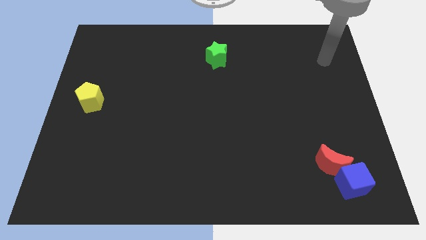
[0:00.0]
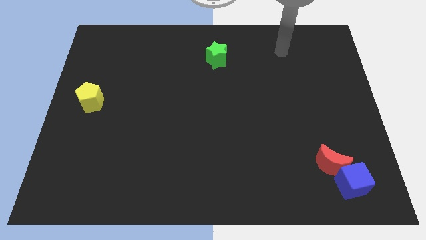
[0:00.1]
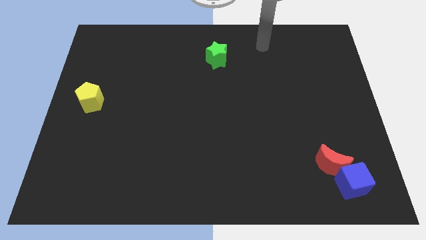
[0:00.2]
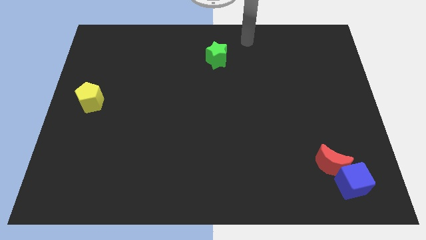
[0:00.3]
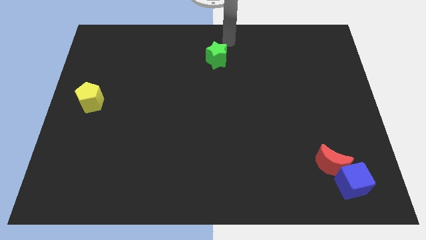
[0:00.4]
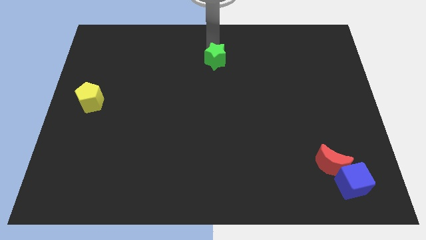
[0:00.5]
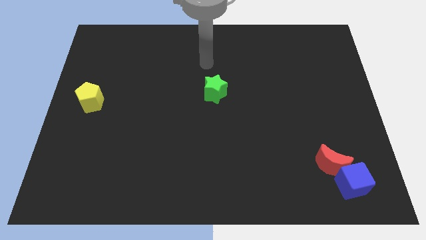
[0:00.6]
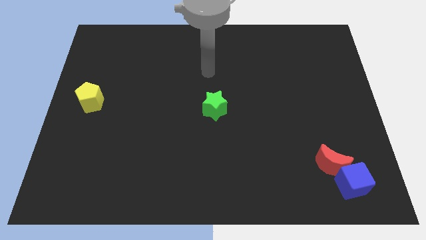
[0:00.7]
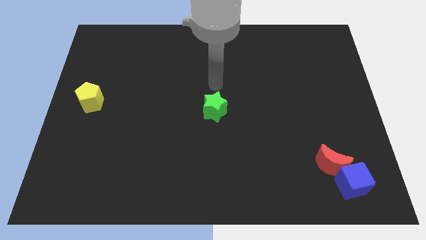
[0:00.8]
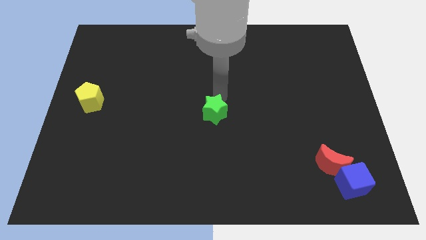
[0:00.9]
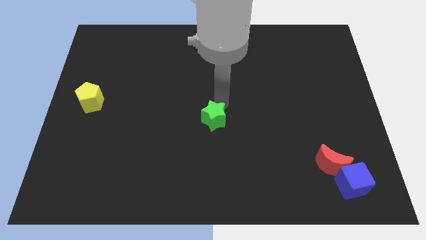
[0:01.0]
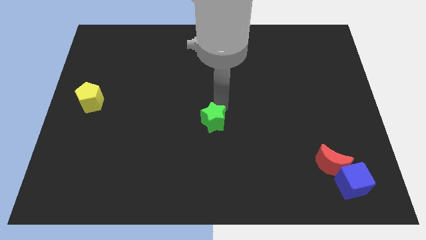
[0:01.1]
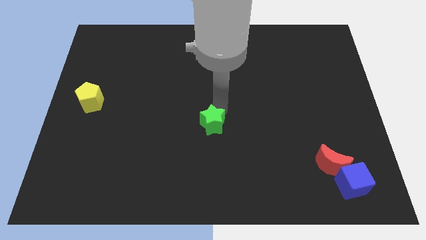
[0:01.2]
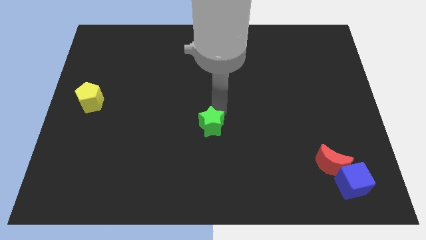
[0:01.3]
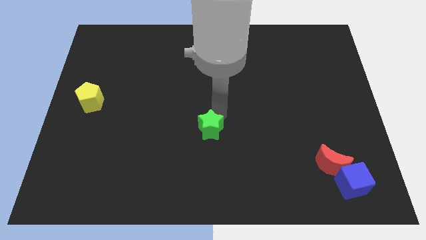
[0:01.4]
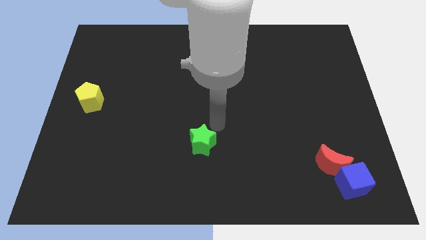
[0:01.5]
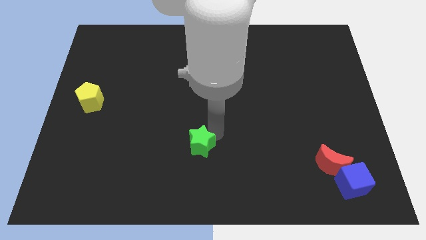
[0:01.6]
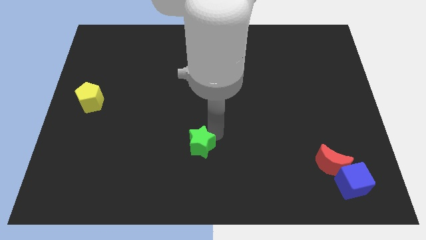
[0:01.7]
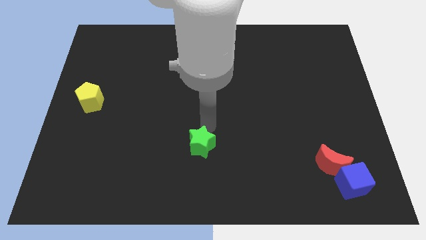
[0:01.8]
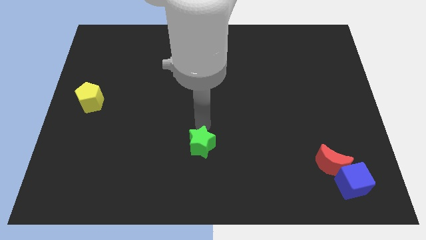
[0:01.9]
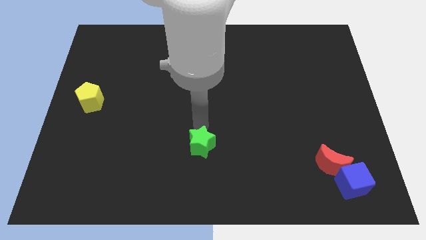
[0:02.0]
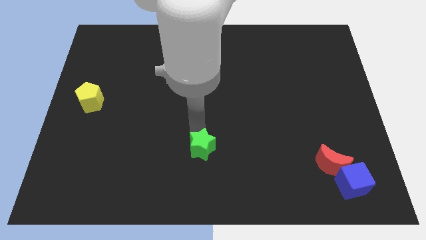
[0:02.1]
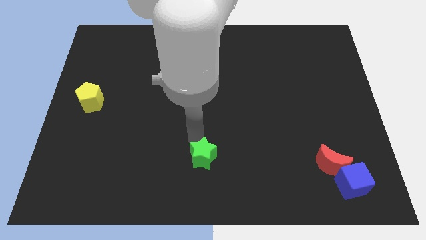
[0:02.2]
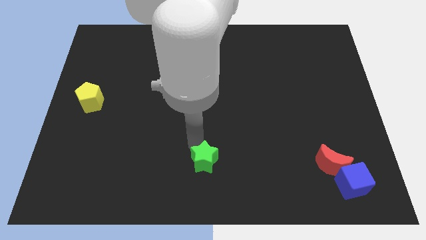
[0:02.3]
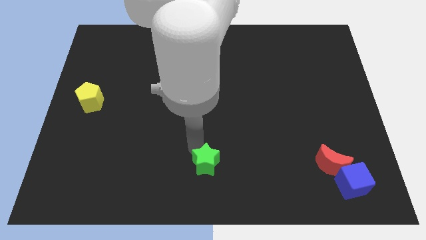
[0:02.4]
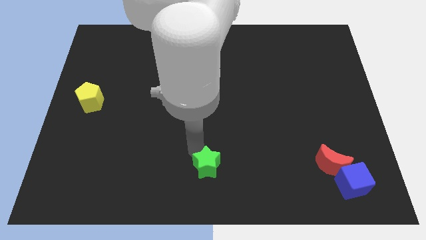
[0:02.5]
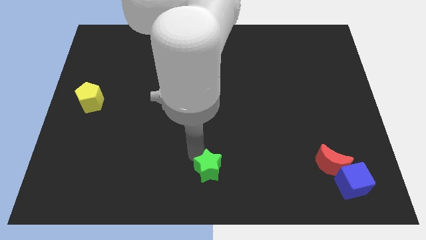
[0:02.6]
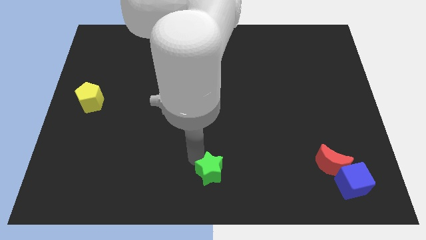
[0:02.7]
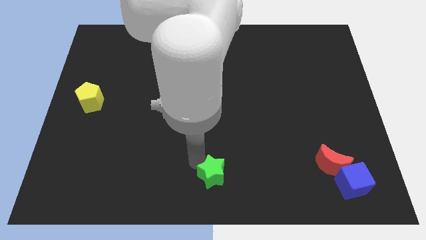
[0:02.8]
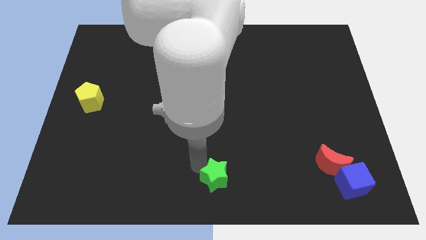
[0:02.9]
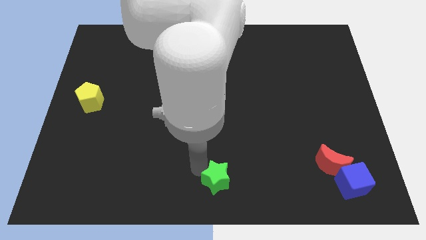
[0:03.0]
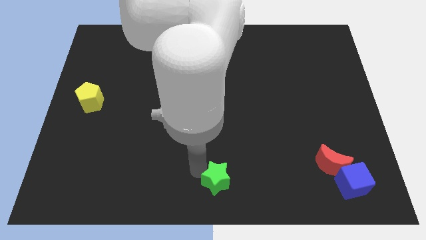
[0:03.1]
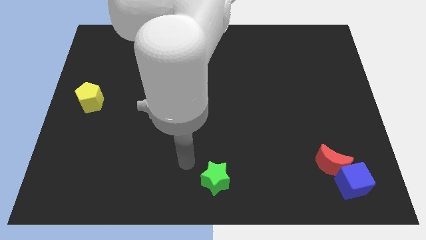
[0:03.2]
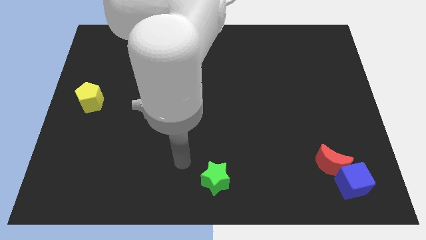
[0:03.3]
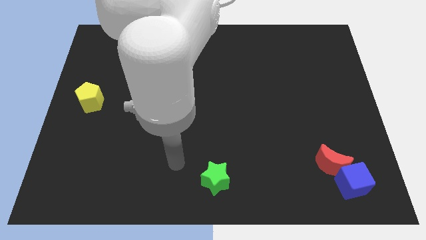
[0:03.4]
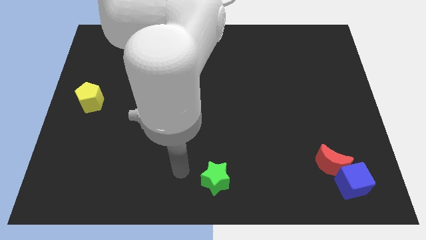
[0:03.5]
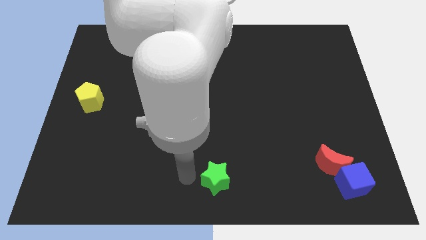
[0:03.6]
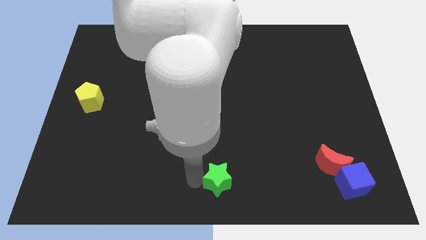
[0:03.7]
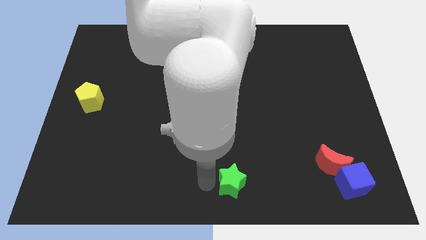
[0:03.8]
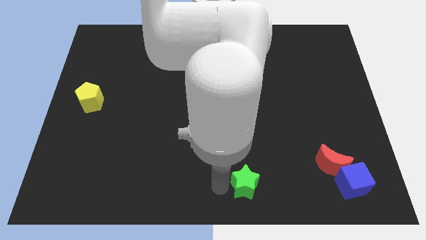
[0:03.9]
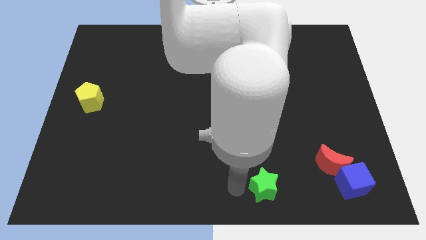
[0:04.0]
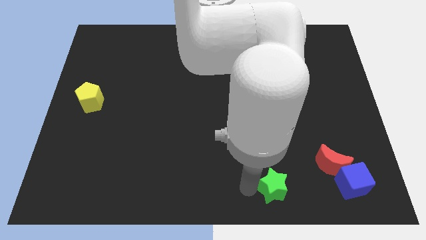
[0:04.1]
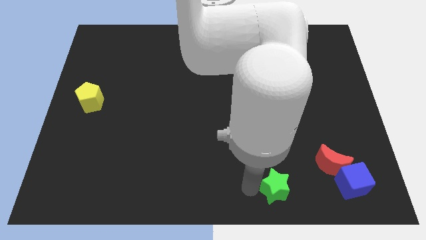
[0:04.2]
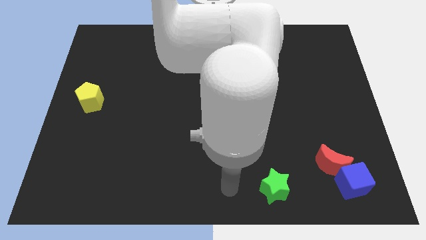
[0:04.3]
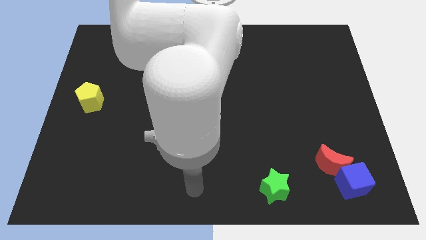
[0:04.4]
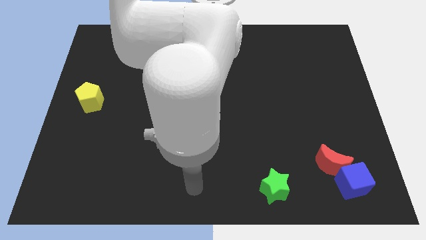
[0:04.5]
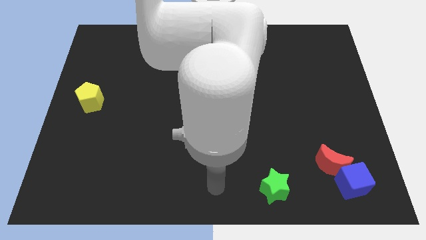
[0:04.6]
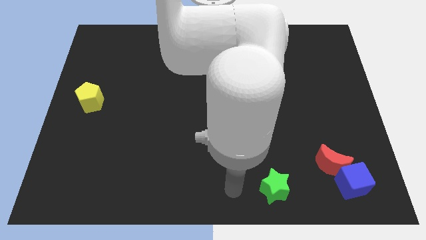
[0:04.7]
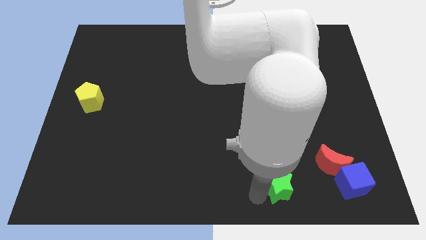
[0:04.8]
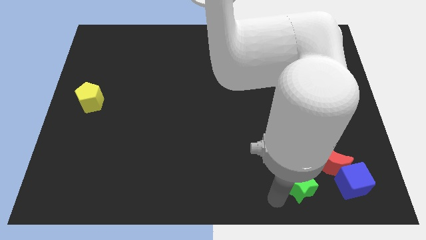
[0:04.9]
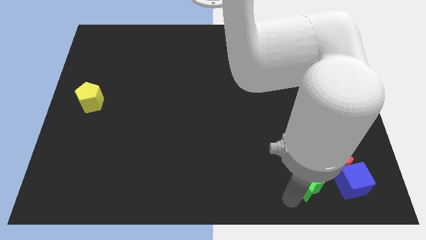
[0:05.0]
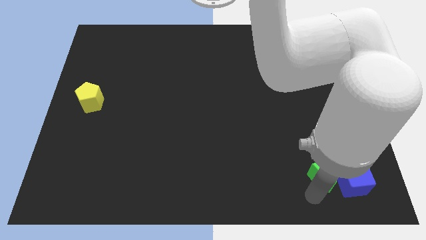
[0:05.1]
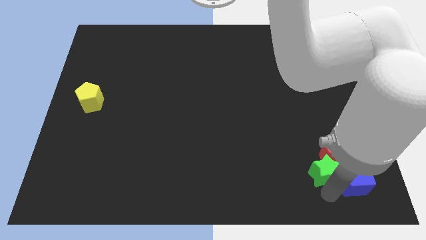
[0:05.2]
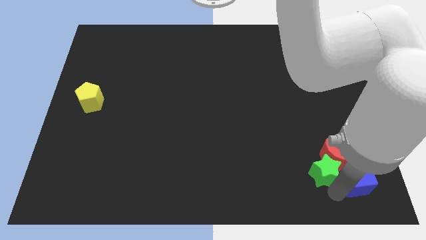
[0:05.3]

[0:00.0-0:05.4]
slide the star towards the blue block

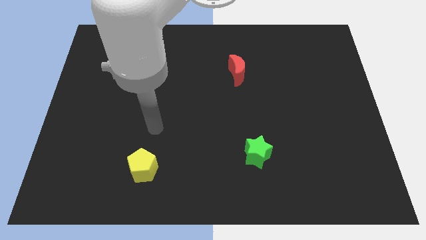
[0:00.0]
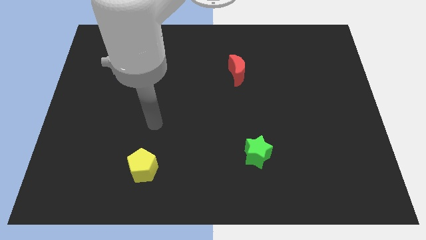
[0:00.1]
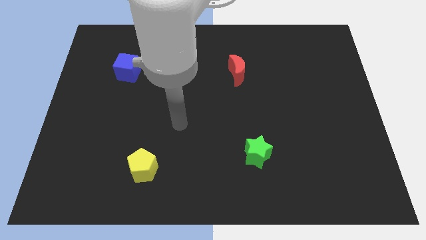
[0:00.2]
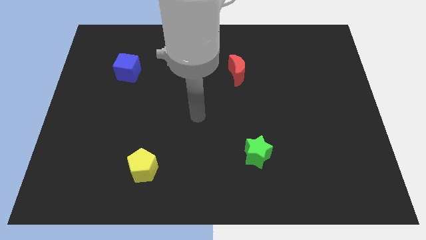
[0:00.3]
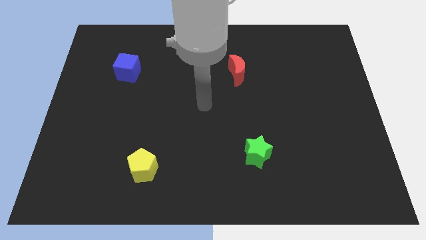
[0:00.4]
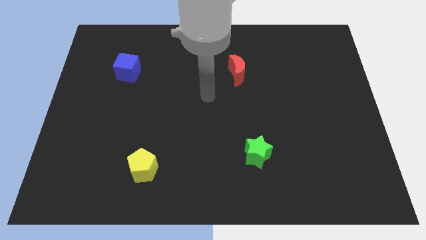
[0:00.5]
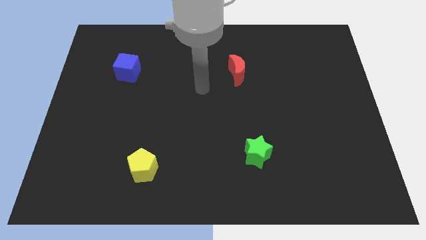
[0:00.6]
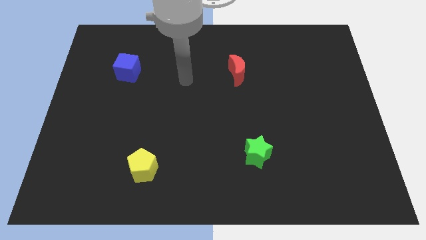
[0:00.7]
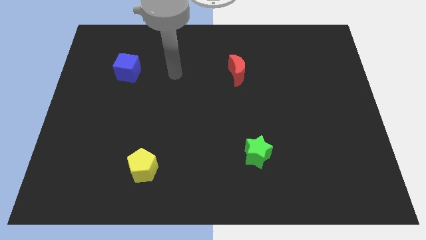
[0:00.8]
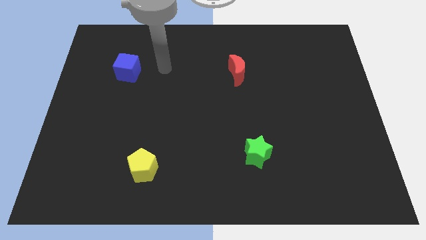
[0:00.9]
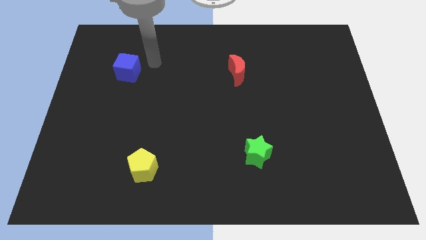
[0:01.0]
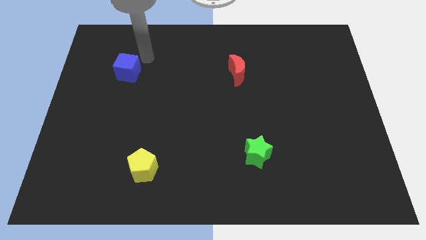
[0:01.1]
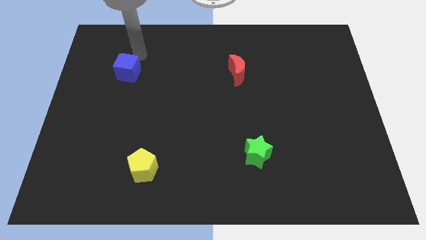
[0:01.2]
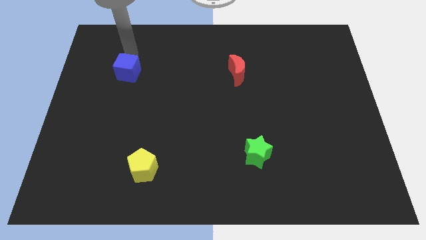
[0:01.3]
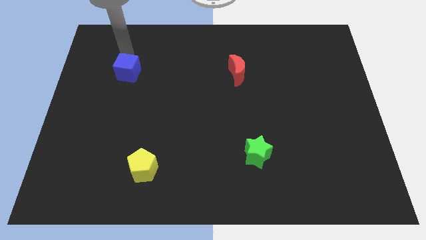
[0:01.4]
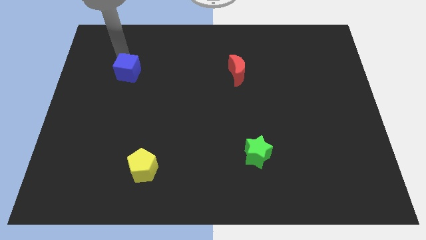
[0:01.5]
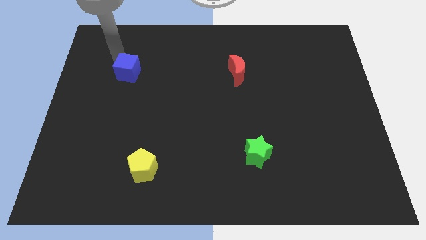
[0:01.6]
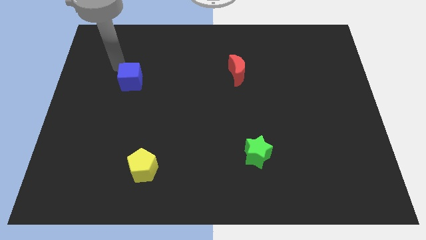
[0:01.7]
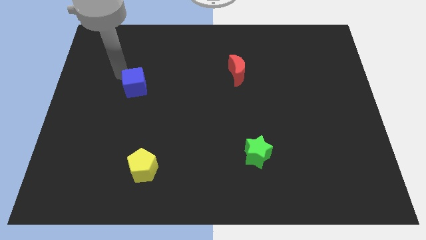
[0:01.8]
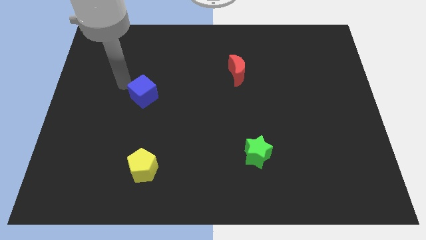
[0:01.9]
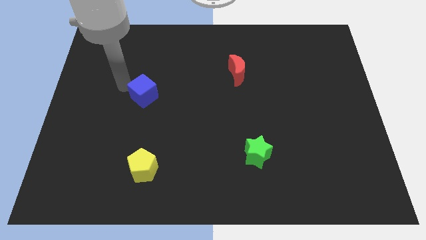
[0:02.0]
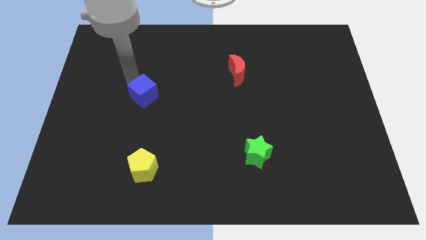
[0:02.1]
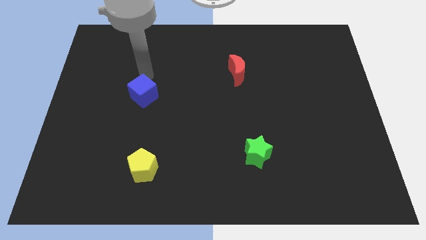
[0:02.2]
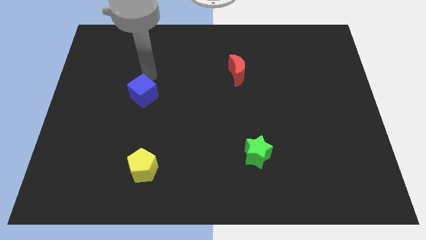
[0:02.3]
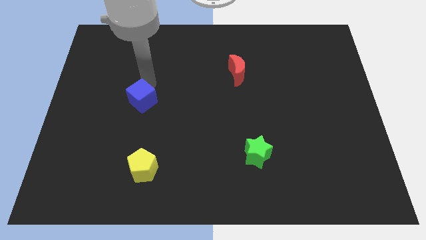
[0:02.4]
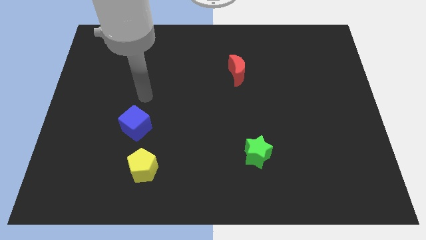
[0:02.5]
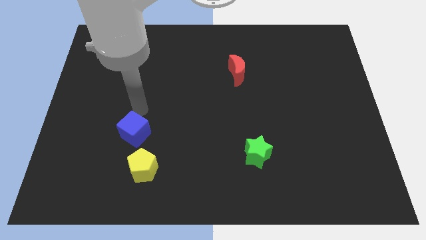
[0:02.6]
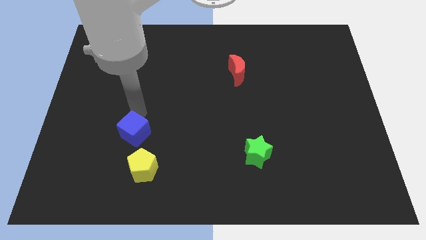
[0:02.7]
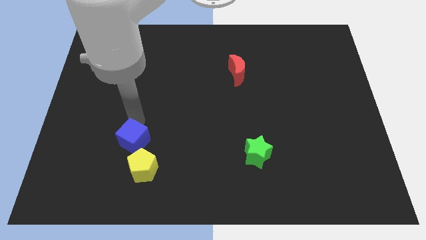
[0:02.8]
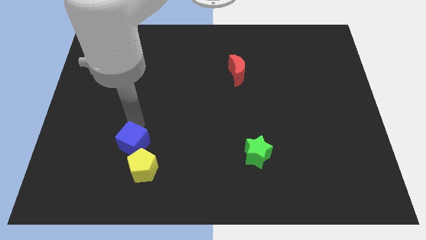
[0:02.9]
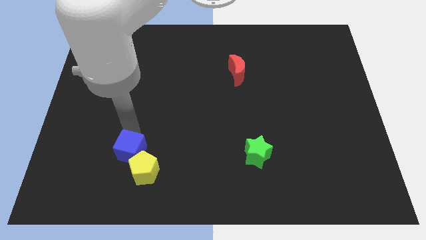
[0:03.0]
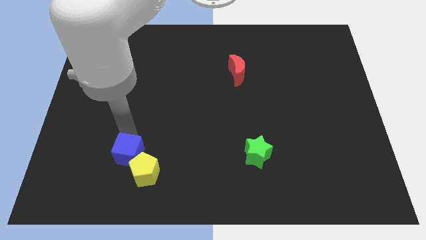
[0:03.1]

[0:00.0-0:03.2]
put the blue block to the yellow pentagon
